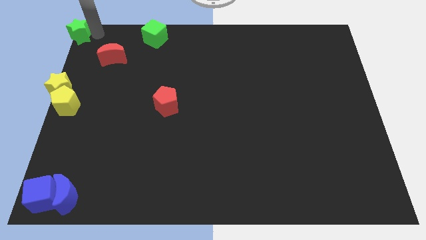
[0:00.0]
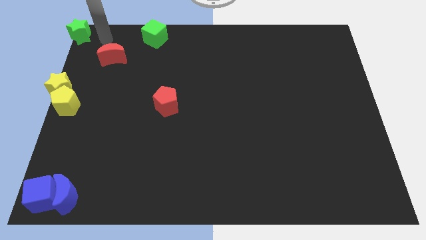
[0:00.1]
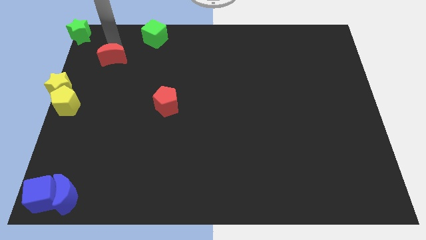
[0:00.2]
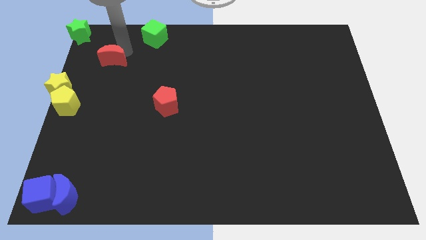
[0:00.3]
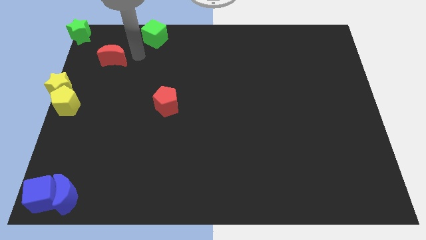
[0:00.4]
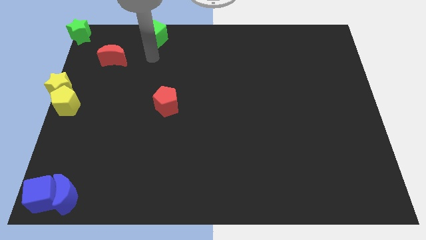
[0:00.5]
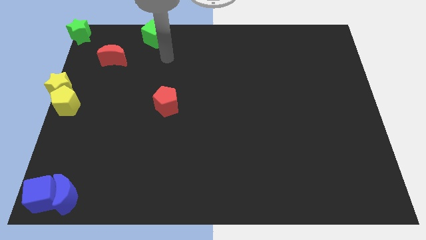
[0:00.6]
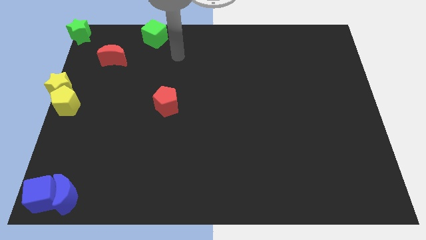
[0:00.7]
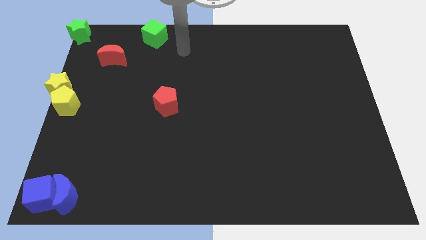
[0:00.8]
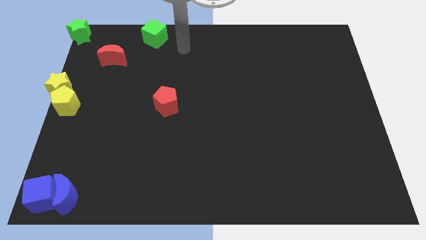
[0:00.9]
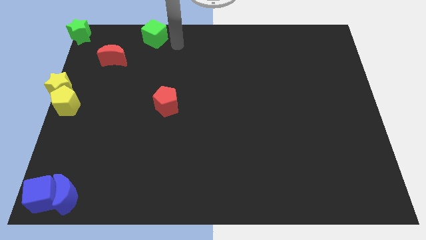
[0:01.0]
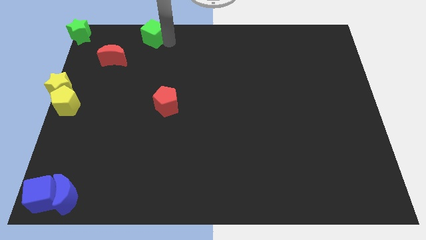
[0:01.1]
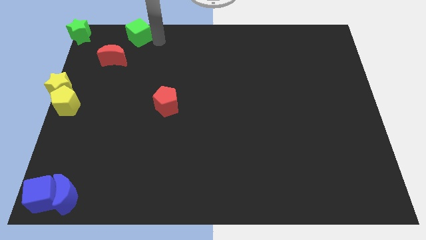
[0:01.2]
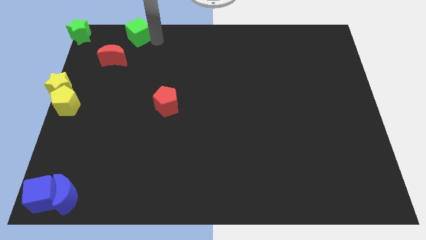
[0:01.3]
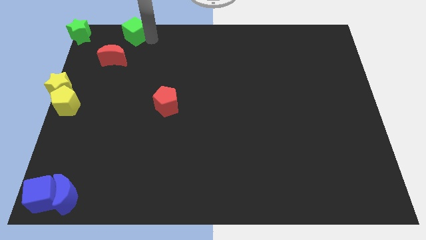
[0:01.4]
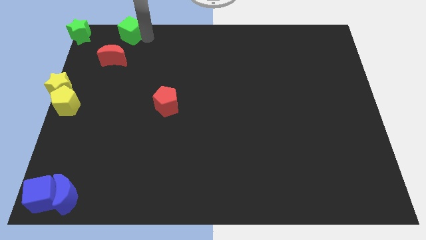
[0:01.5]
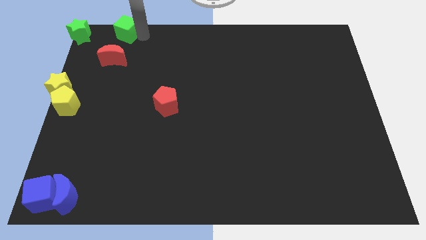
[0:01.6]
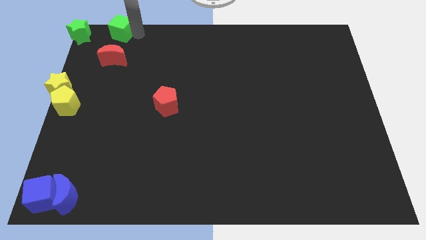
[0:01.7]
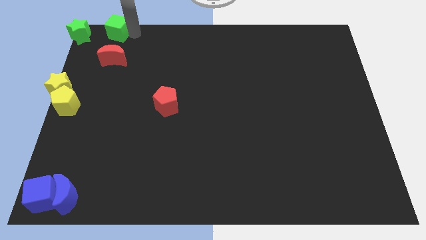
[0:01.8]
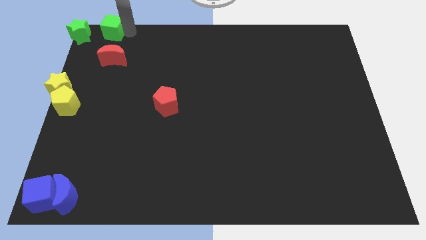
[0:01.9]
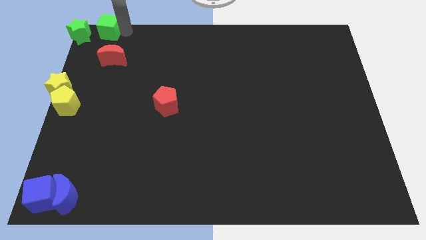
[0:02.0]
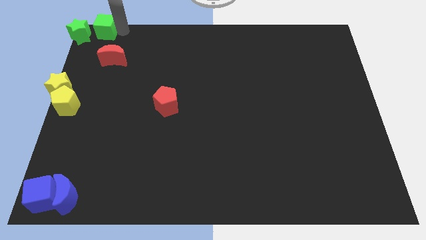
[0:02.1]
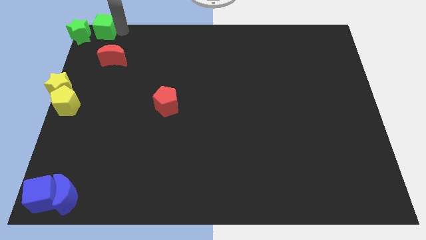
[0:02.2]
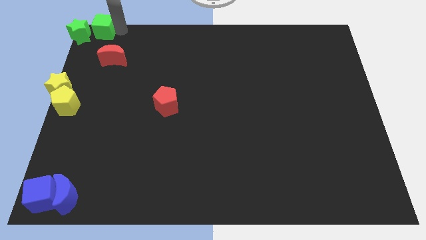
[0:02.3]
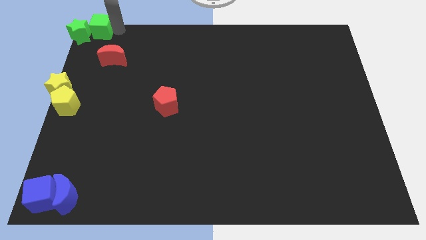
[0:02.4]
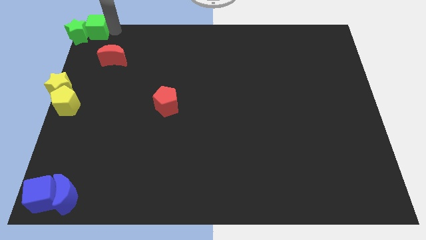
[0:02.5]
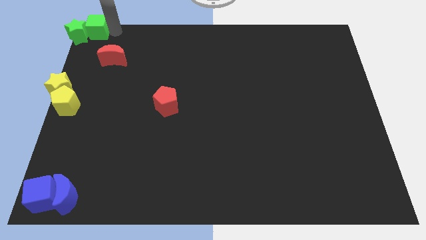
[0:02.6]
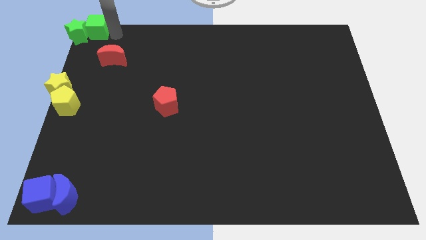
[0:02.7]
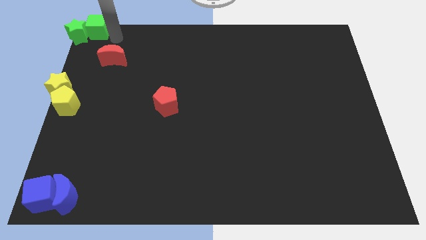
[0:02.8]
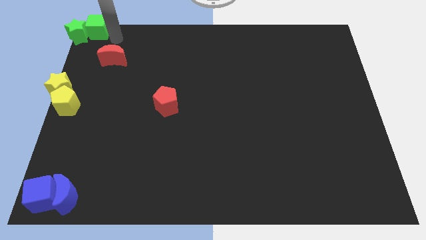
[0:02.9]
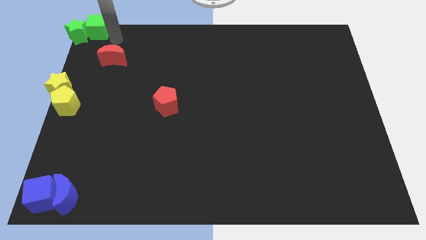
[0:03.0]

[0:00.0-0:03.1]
push the green cube into the right side of the green star

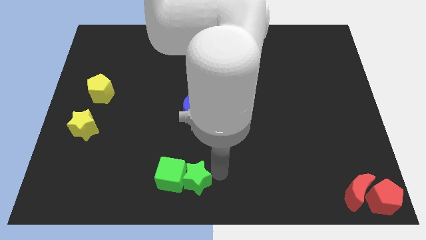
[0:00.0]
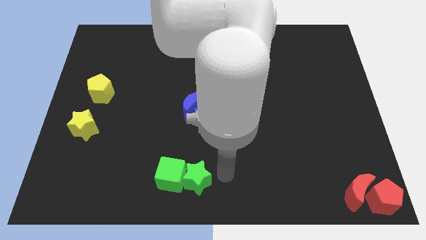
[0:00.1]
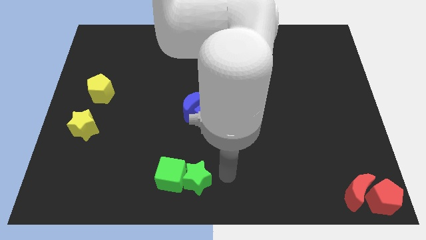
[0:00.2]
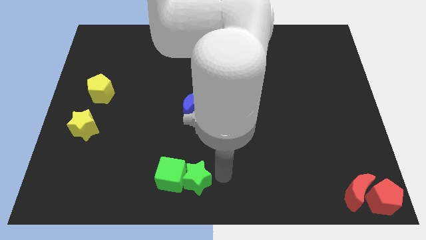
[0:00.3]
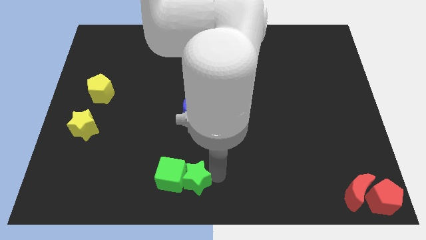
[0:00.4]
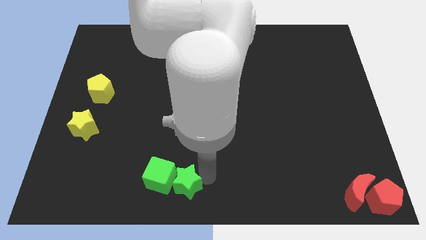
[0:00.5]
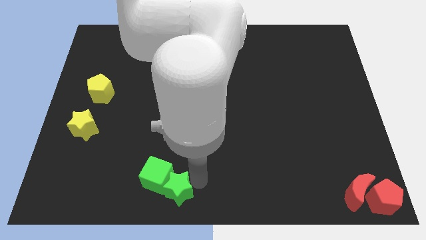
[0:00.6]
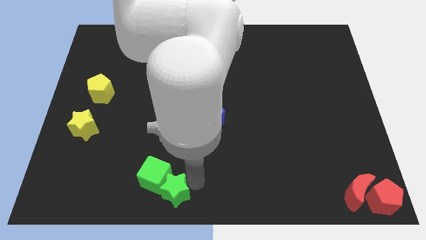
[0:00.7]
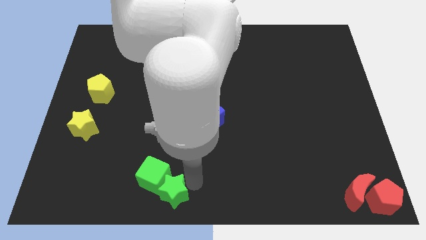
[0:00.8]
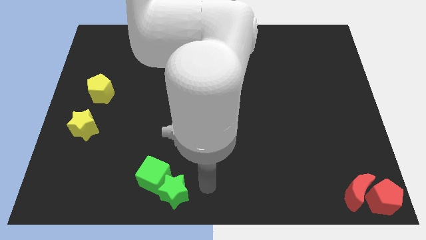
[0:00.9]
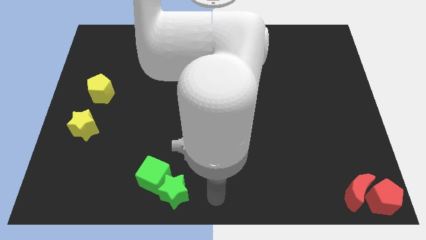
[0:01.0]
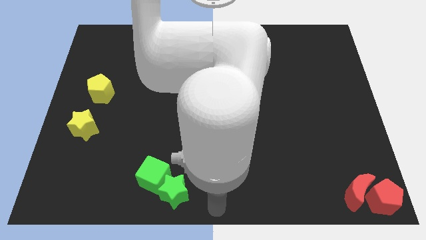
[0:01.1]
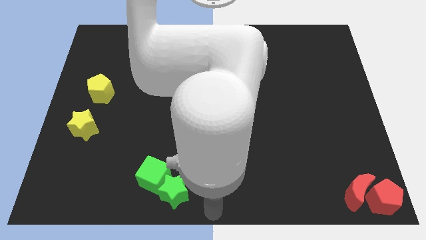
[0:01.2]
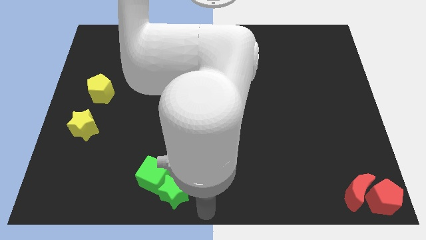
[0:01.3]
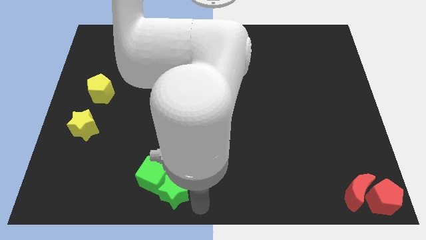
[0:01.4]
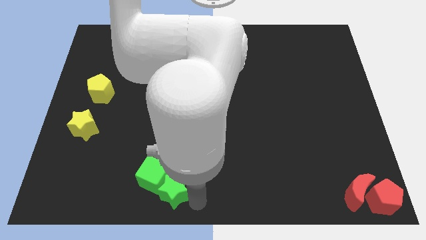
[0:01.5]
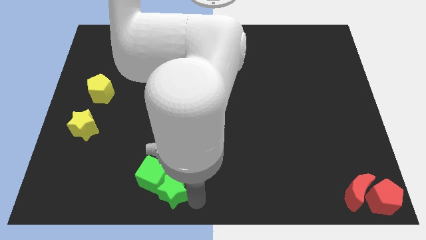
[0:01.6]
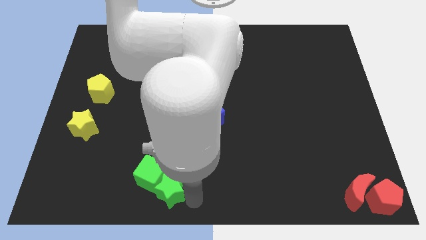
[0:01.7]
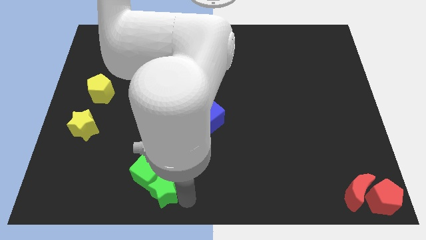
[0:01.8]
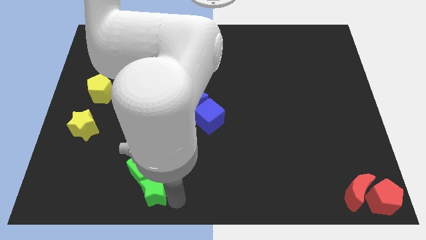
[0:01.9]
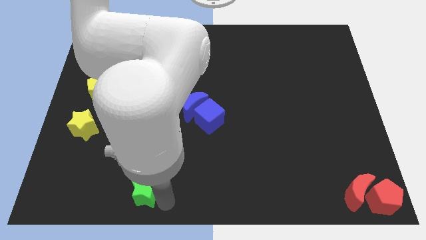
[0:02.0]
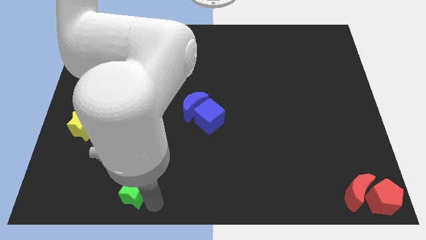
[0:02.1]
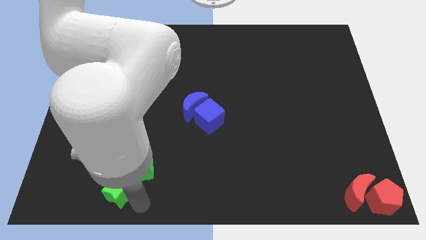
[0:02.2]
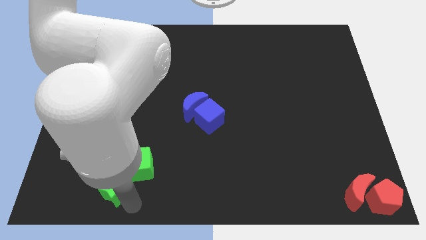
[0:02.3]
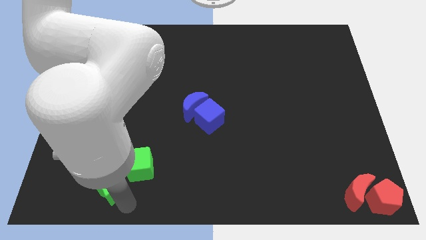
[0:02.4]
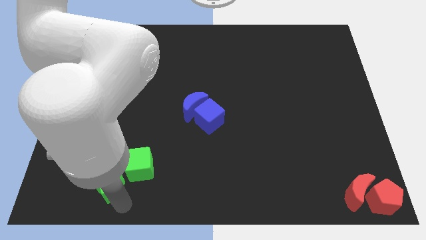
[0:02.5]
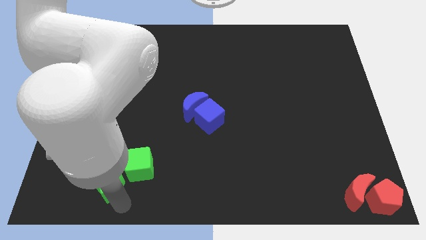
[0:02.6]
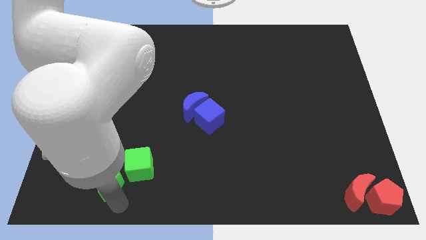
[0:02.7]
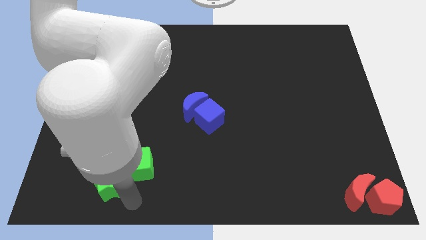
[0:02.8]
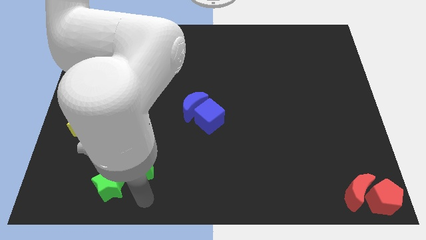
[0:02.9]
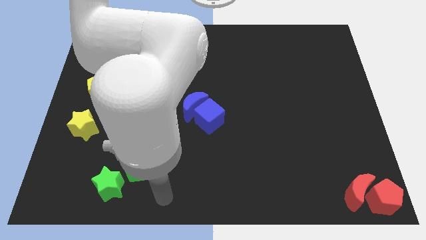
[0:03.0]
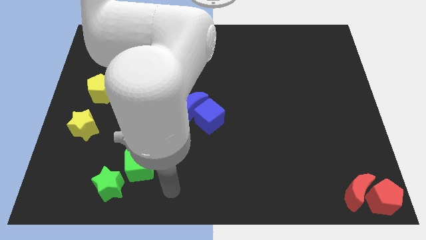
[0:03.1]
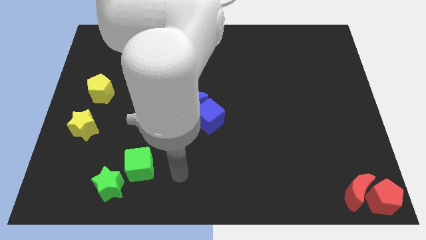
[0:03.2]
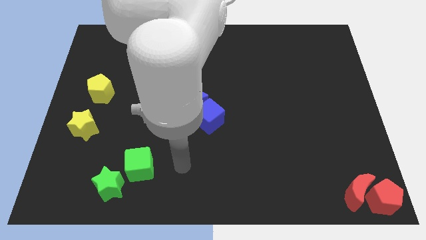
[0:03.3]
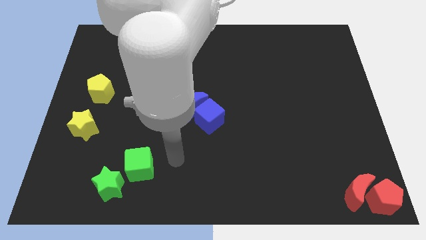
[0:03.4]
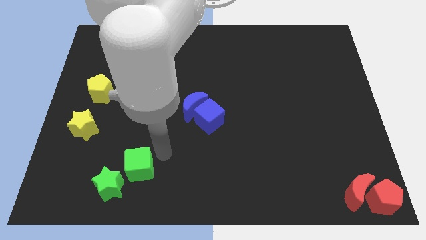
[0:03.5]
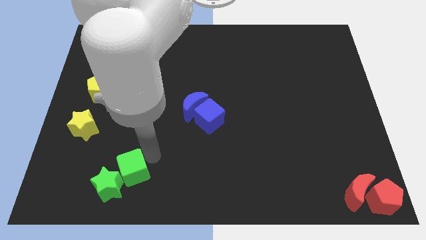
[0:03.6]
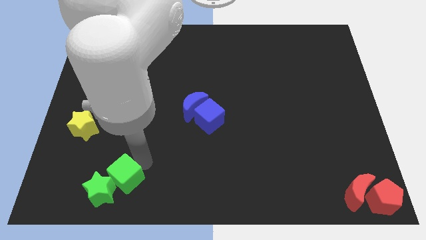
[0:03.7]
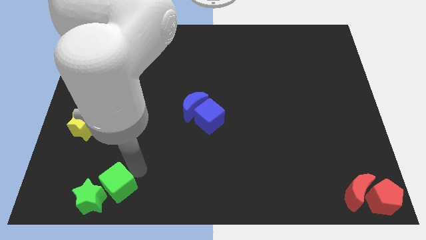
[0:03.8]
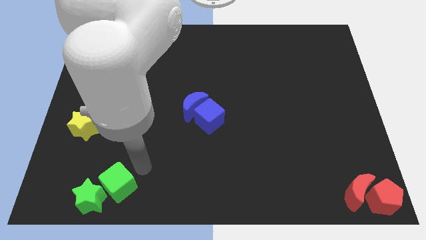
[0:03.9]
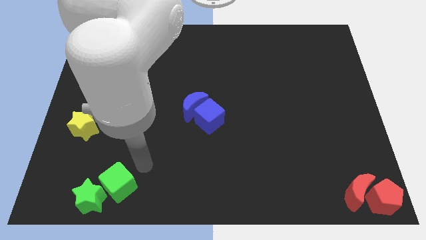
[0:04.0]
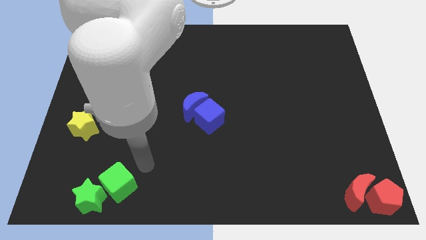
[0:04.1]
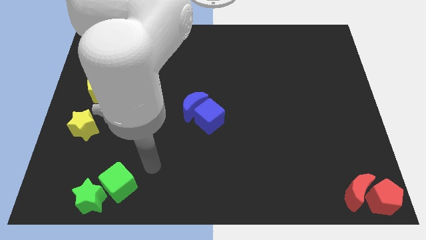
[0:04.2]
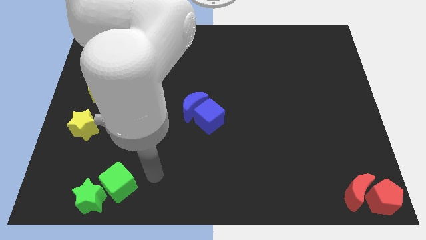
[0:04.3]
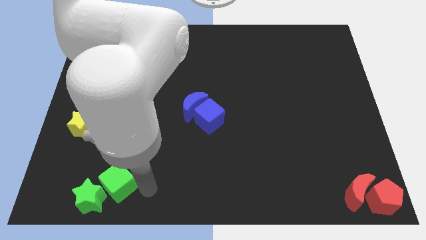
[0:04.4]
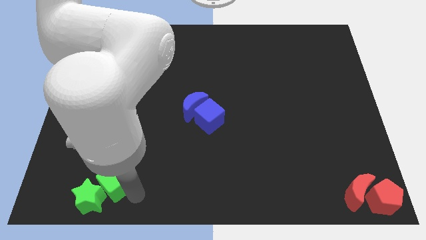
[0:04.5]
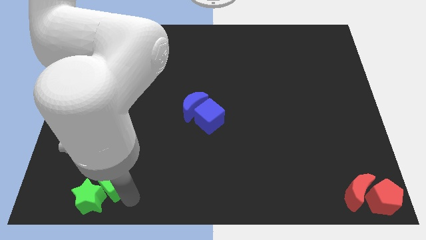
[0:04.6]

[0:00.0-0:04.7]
push the green blocks together towards the bottom left corner of the board

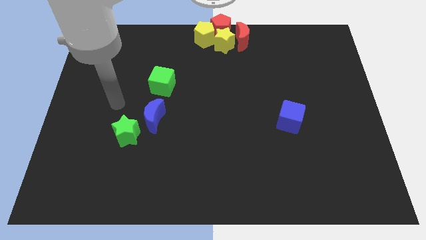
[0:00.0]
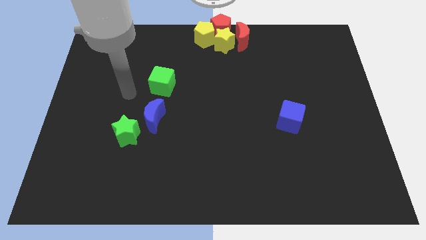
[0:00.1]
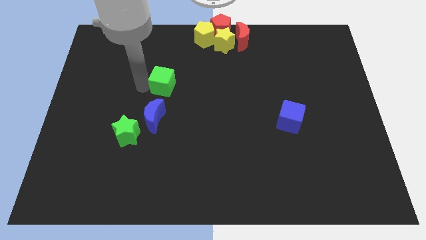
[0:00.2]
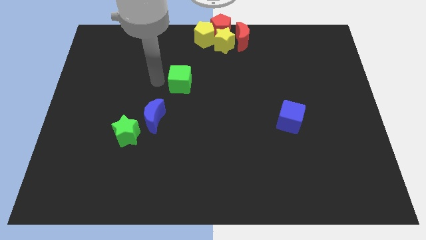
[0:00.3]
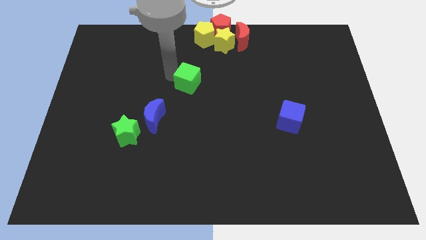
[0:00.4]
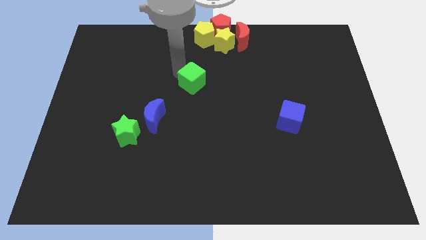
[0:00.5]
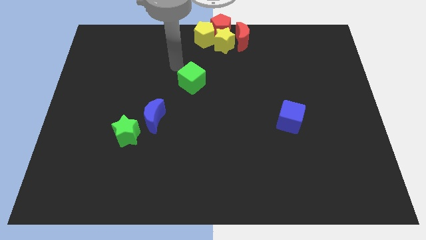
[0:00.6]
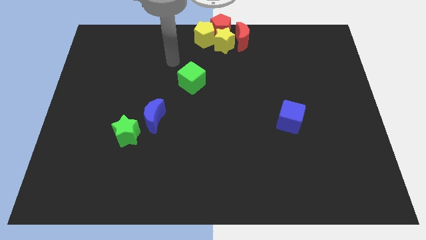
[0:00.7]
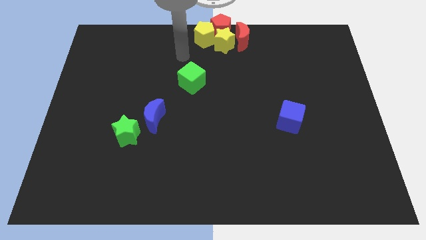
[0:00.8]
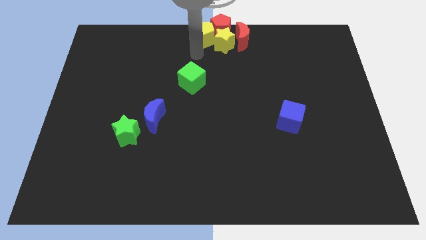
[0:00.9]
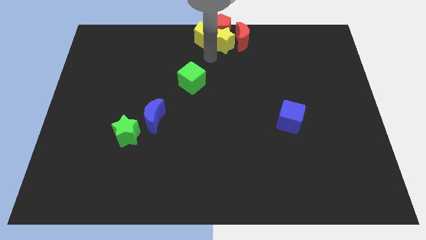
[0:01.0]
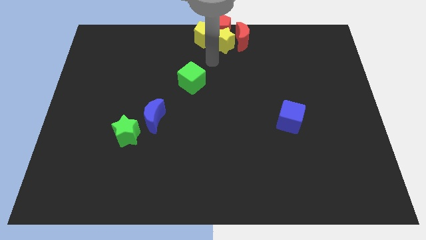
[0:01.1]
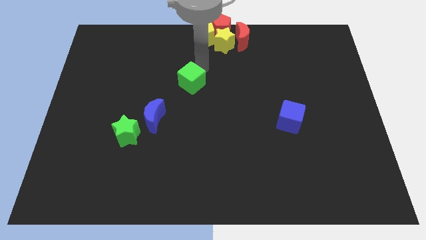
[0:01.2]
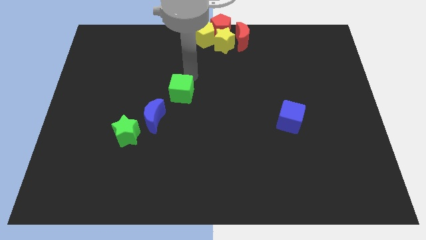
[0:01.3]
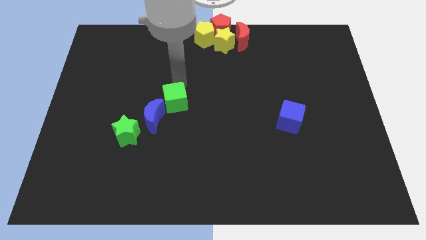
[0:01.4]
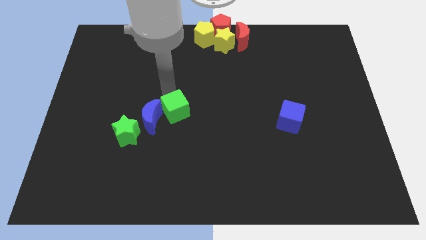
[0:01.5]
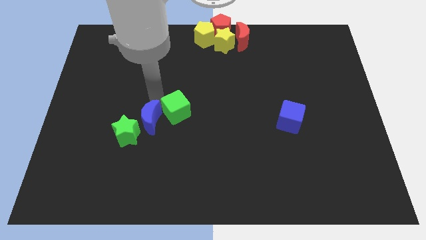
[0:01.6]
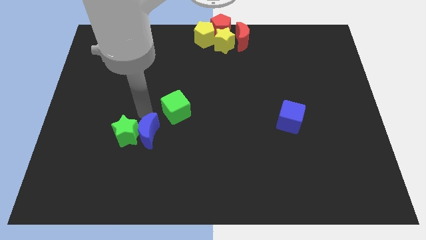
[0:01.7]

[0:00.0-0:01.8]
push the green cube downward
